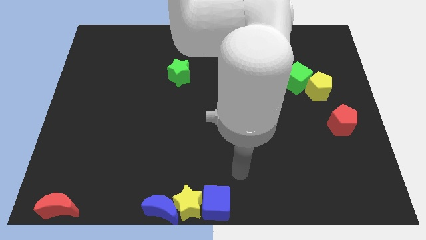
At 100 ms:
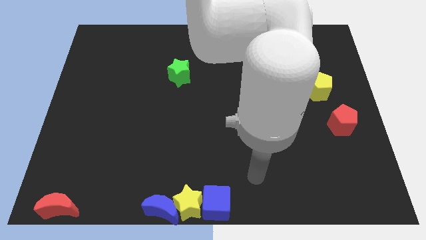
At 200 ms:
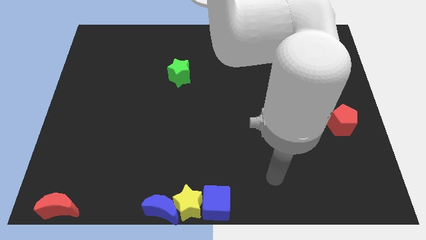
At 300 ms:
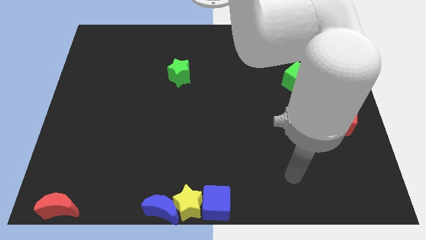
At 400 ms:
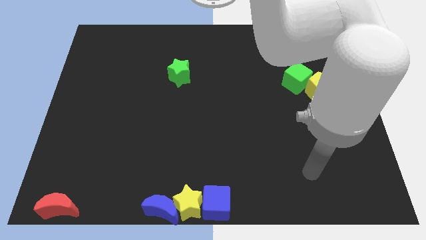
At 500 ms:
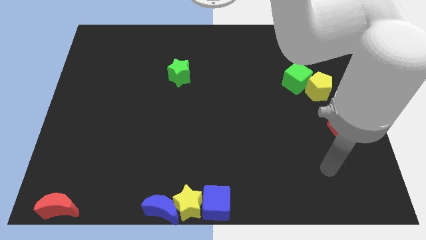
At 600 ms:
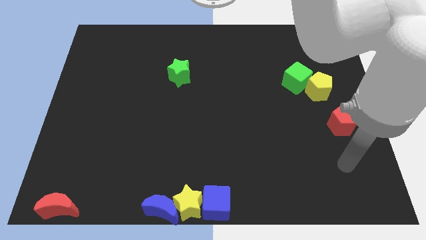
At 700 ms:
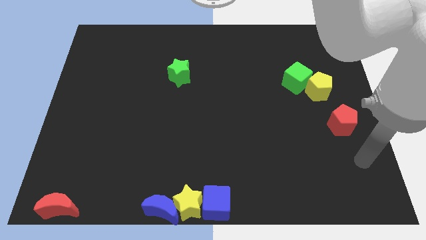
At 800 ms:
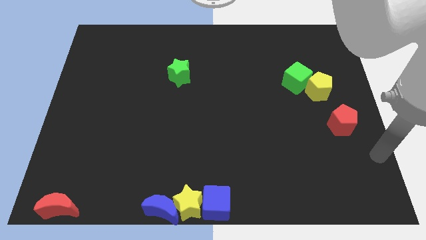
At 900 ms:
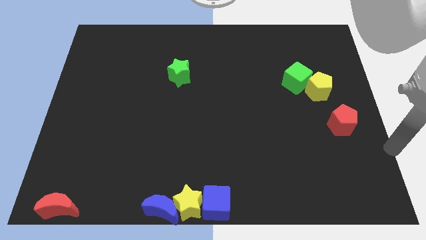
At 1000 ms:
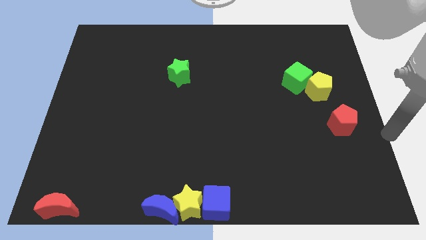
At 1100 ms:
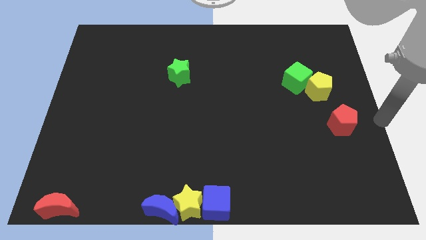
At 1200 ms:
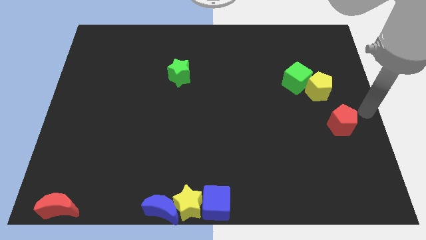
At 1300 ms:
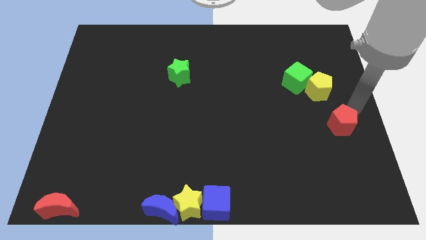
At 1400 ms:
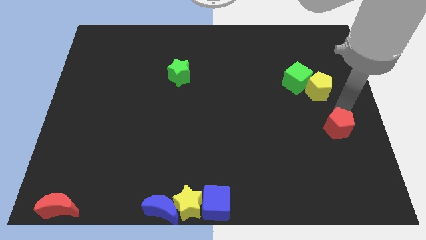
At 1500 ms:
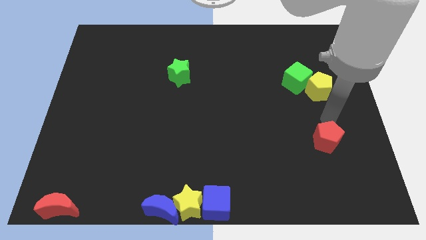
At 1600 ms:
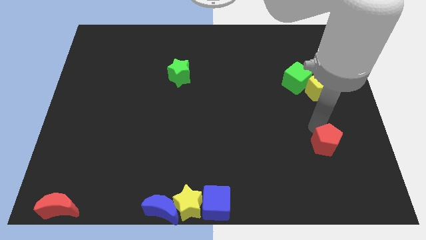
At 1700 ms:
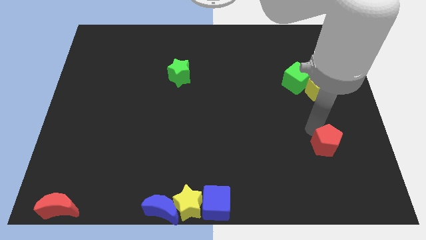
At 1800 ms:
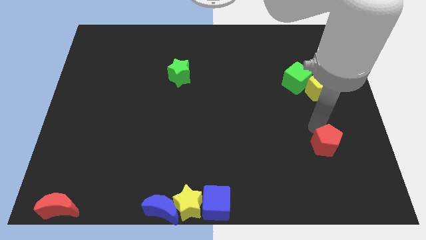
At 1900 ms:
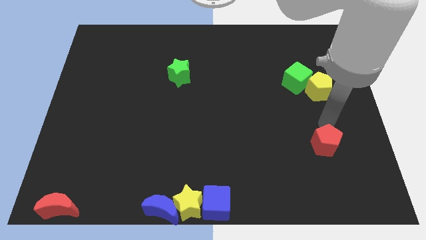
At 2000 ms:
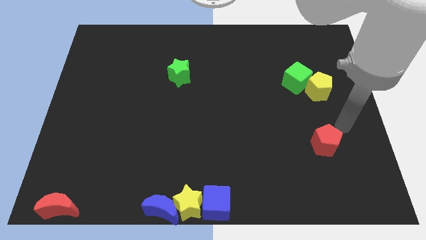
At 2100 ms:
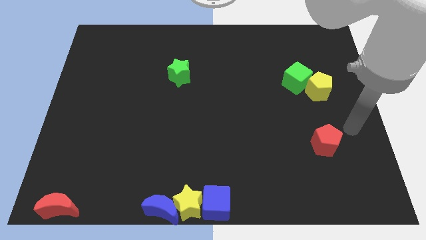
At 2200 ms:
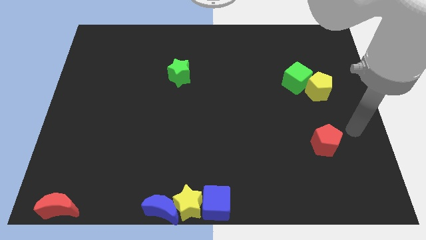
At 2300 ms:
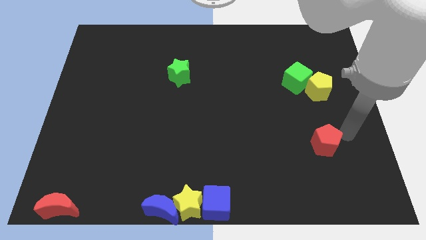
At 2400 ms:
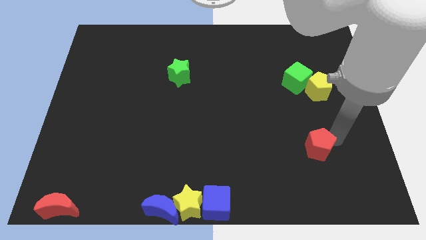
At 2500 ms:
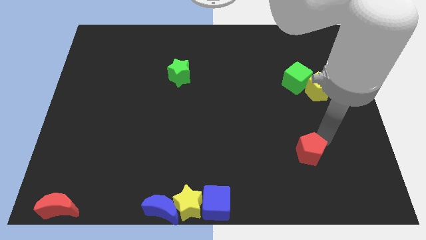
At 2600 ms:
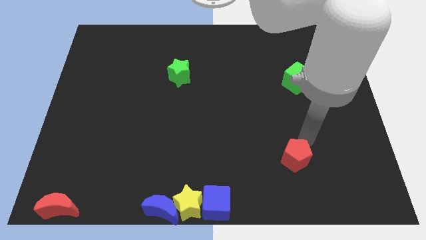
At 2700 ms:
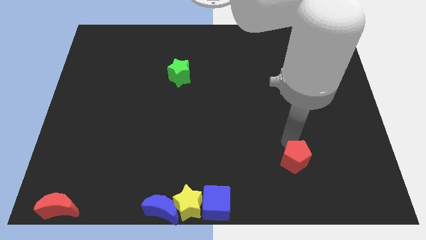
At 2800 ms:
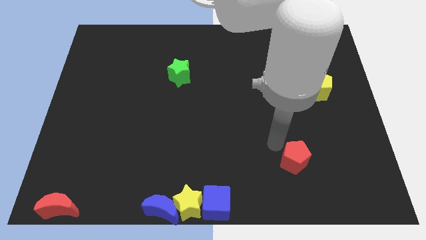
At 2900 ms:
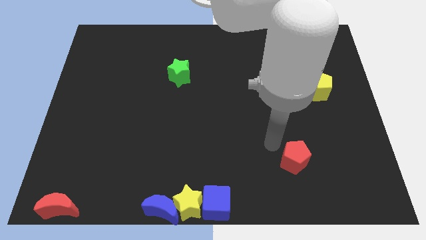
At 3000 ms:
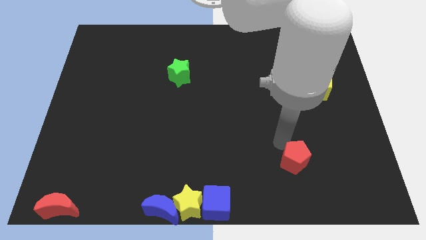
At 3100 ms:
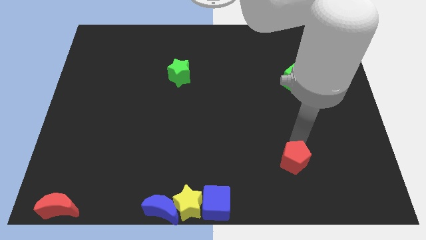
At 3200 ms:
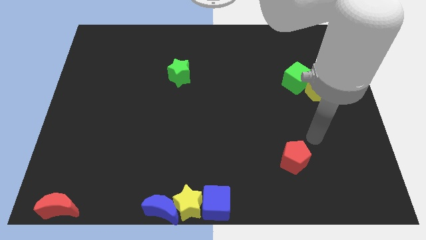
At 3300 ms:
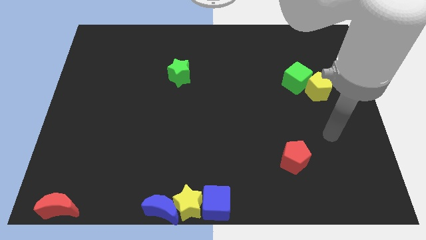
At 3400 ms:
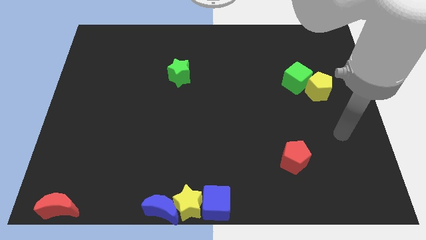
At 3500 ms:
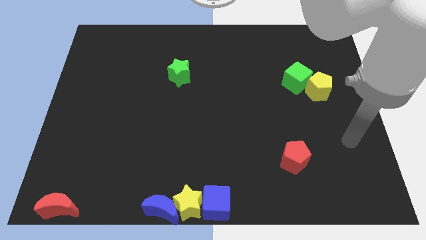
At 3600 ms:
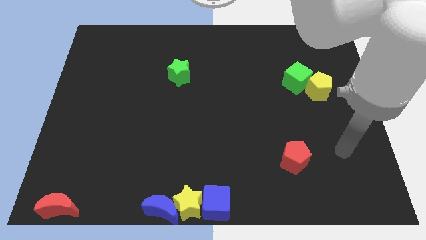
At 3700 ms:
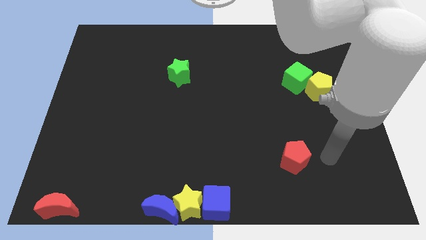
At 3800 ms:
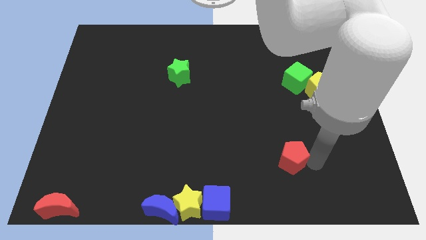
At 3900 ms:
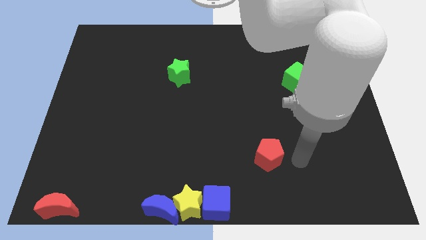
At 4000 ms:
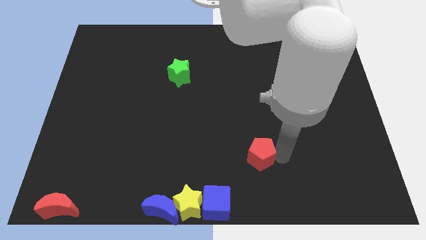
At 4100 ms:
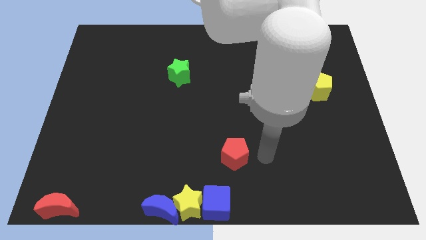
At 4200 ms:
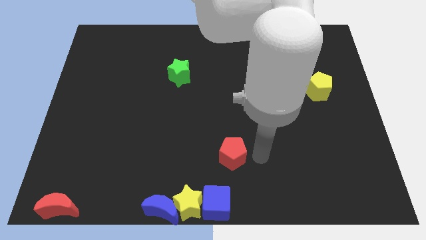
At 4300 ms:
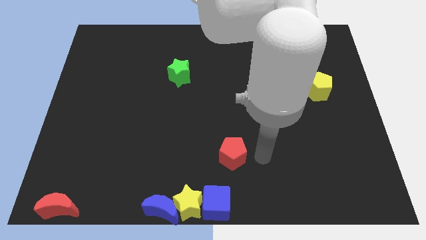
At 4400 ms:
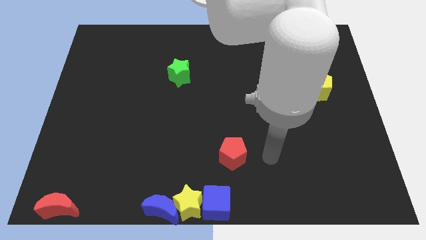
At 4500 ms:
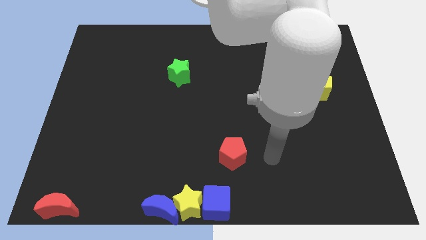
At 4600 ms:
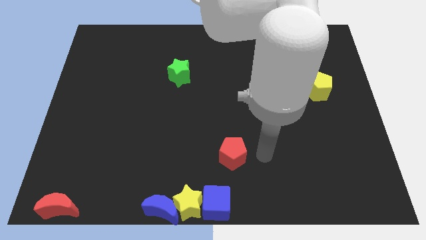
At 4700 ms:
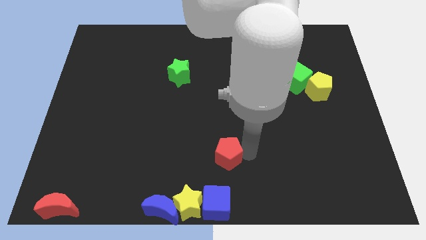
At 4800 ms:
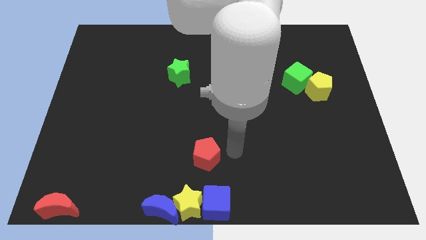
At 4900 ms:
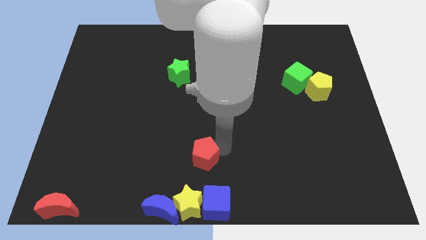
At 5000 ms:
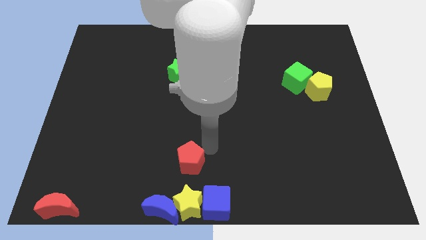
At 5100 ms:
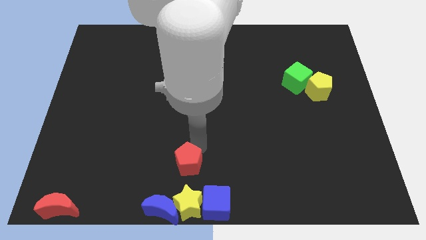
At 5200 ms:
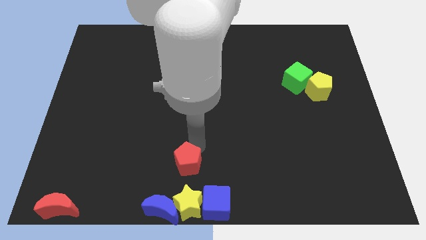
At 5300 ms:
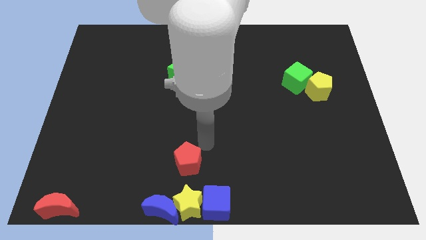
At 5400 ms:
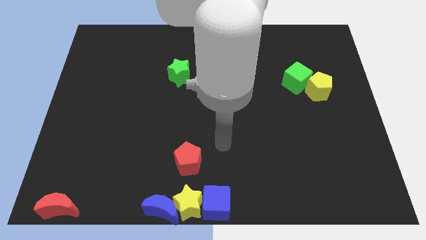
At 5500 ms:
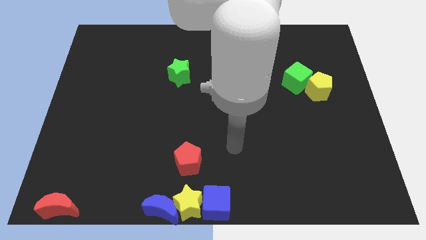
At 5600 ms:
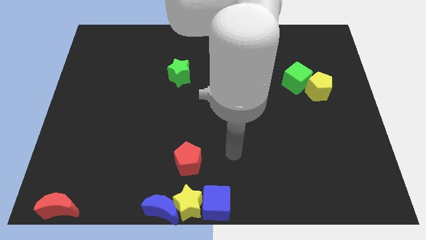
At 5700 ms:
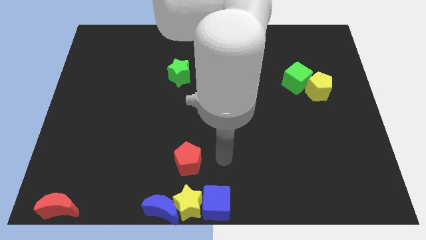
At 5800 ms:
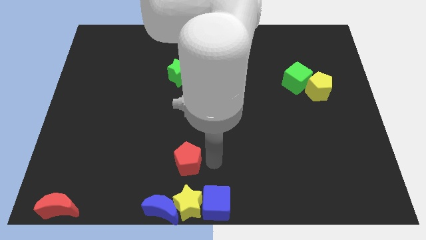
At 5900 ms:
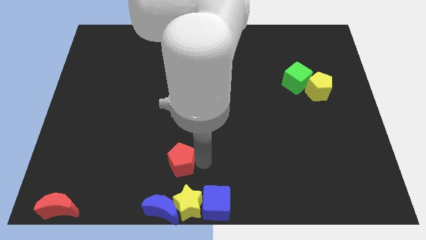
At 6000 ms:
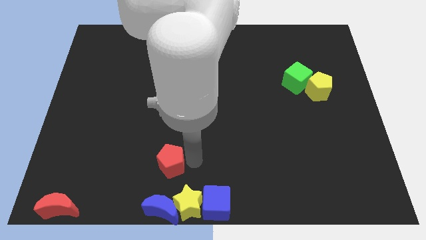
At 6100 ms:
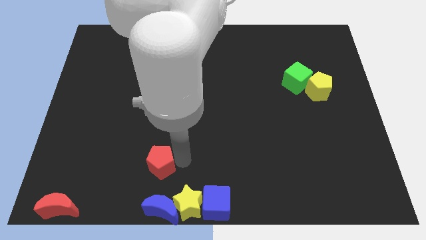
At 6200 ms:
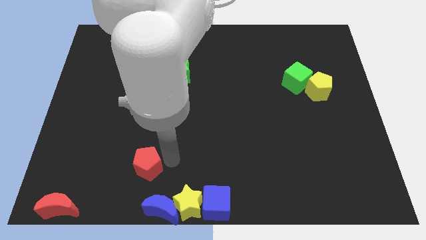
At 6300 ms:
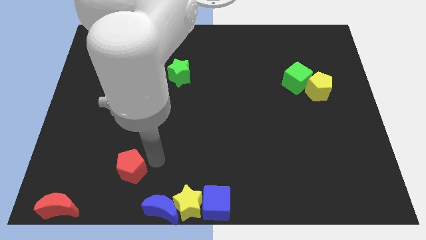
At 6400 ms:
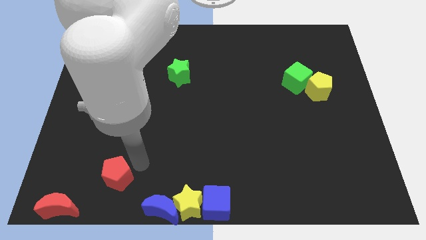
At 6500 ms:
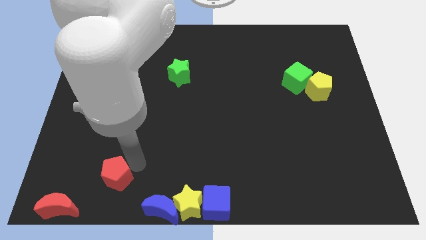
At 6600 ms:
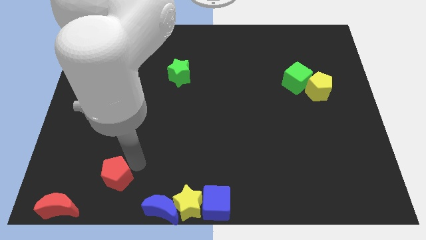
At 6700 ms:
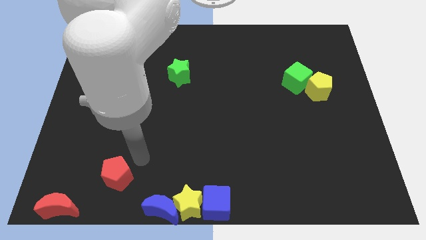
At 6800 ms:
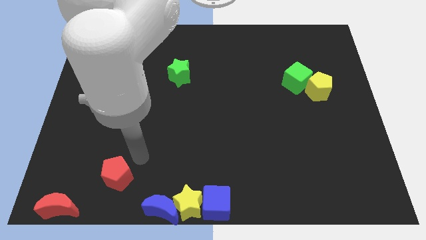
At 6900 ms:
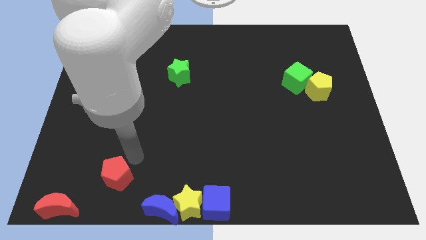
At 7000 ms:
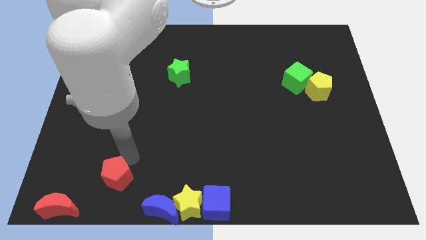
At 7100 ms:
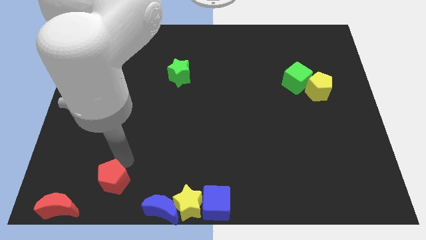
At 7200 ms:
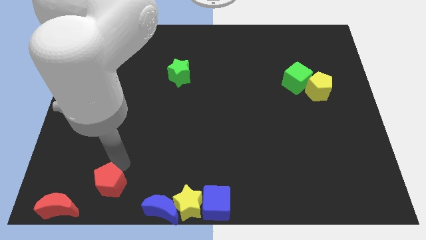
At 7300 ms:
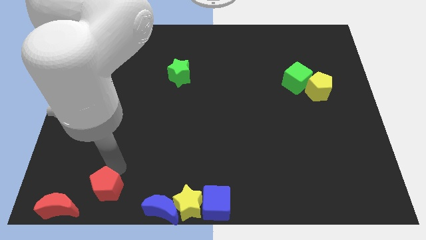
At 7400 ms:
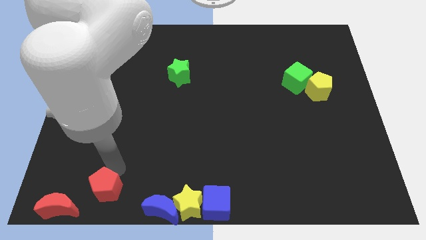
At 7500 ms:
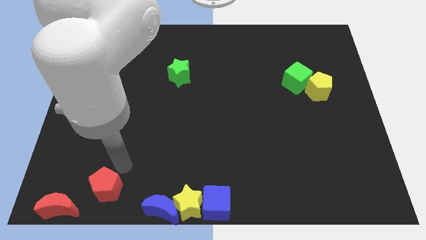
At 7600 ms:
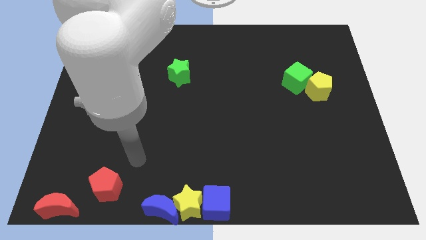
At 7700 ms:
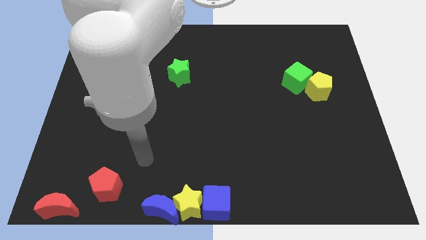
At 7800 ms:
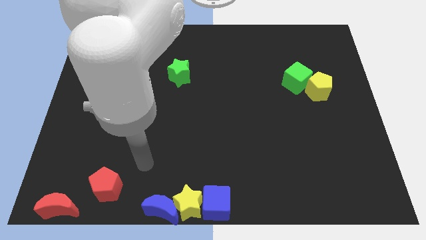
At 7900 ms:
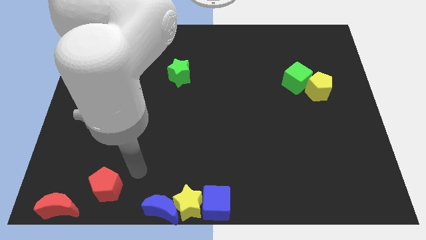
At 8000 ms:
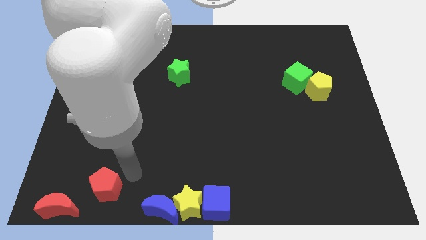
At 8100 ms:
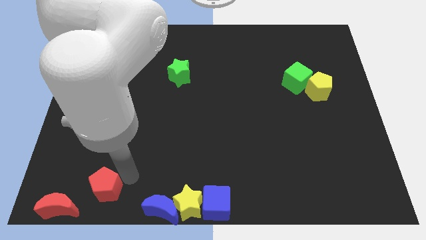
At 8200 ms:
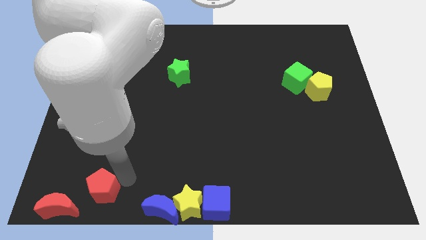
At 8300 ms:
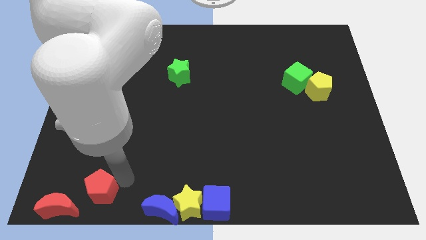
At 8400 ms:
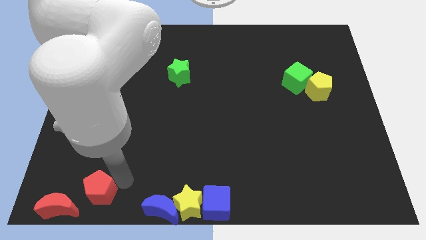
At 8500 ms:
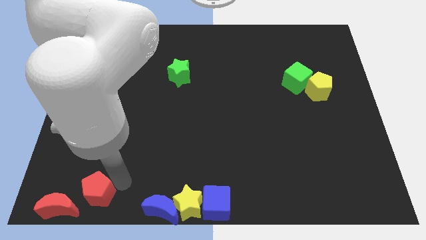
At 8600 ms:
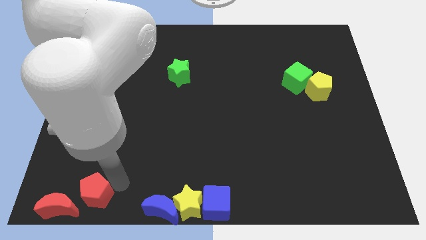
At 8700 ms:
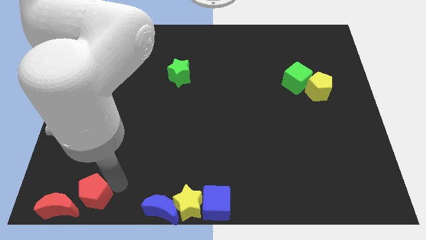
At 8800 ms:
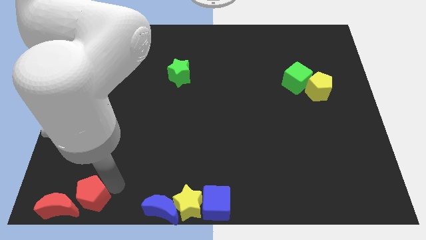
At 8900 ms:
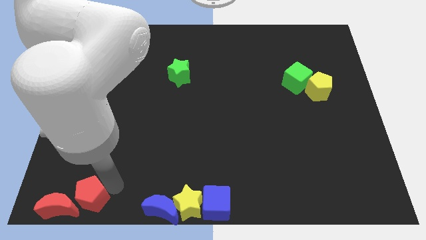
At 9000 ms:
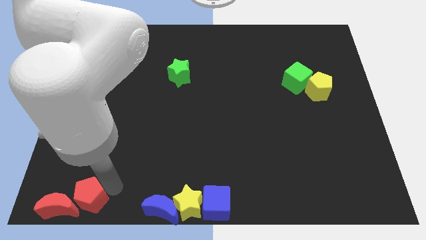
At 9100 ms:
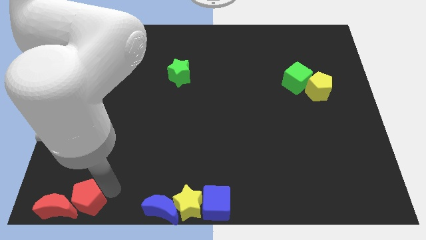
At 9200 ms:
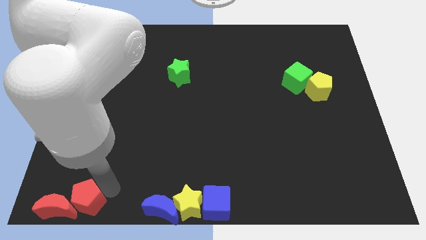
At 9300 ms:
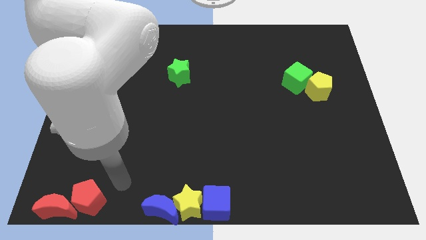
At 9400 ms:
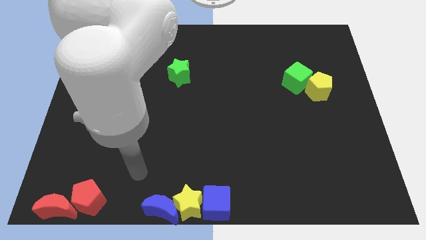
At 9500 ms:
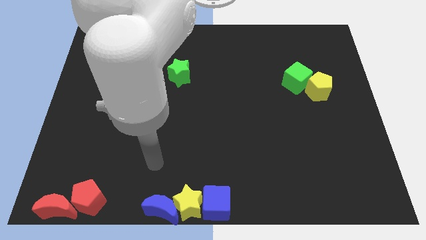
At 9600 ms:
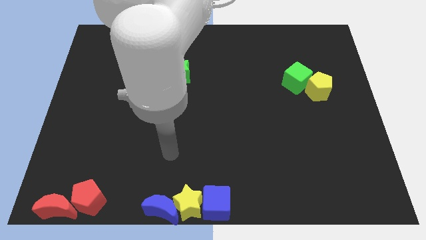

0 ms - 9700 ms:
push the red pentagon to the top of the red crescent
